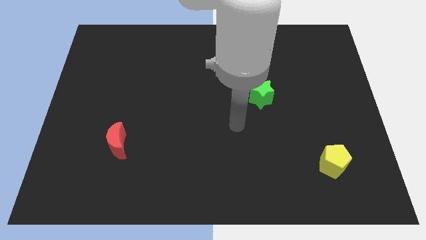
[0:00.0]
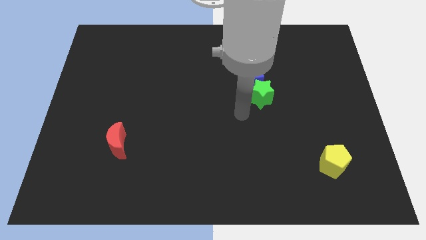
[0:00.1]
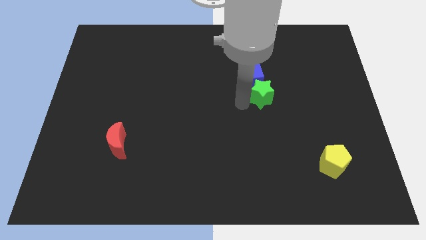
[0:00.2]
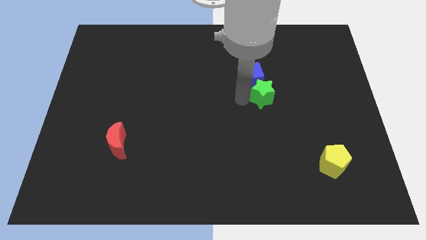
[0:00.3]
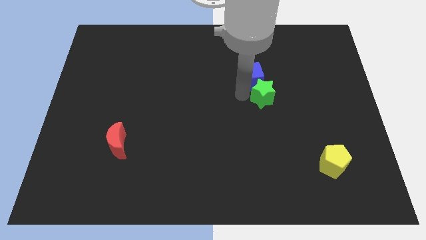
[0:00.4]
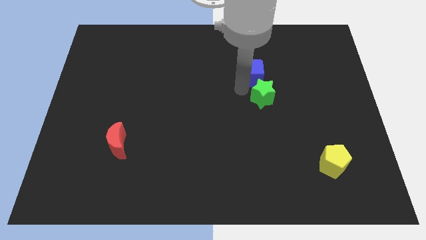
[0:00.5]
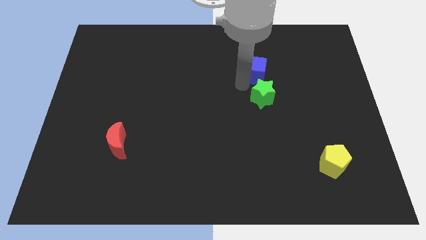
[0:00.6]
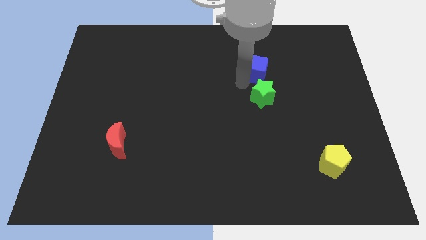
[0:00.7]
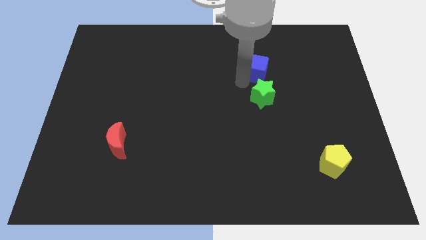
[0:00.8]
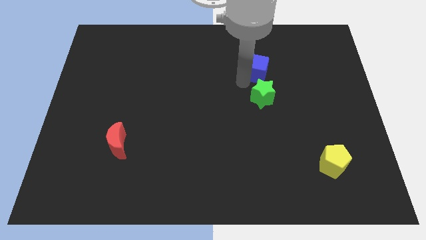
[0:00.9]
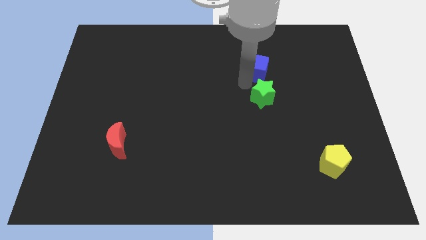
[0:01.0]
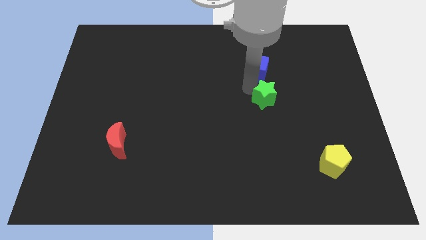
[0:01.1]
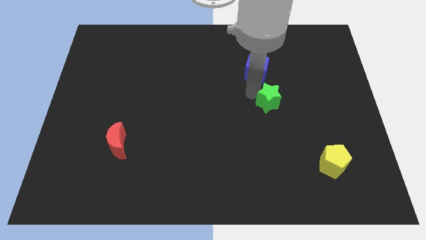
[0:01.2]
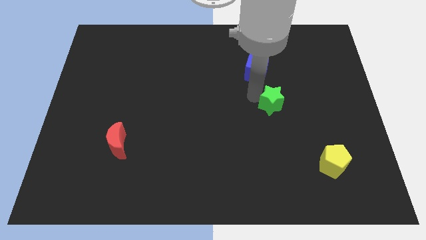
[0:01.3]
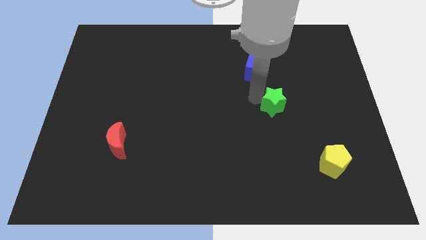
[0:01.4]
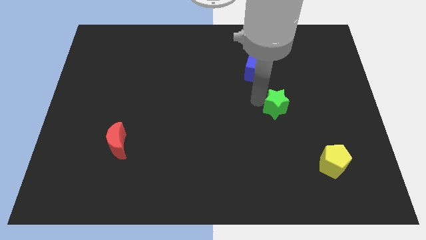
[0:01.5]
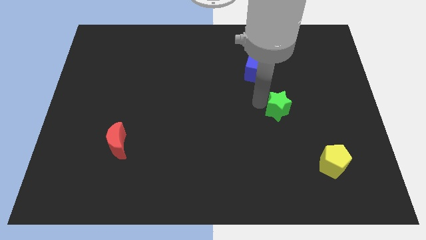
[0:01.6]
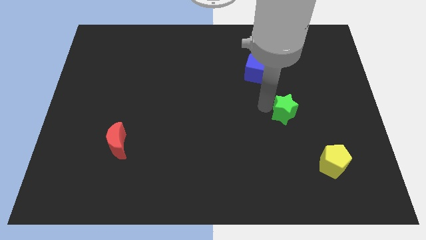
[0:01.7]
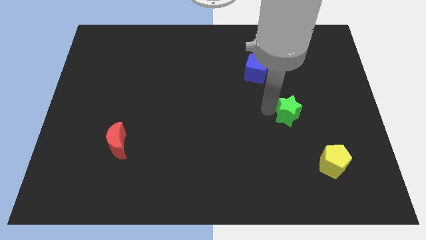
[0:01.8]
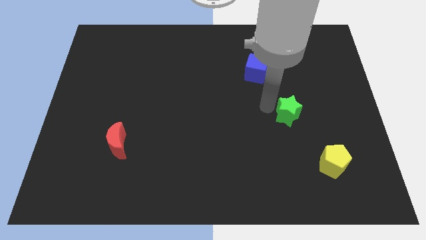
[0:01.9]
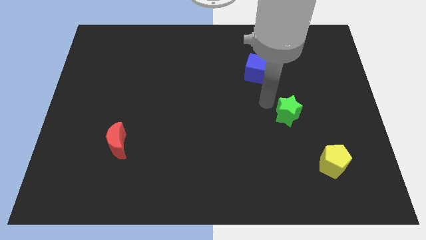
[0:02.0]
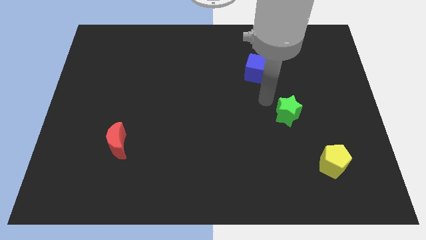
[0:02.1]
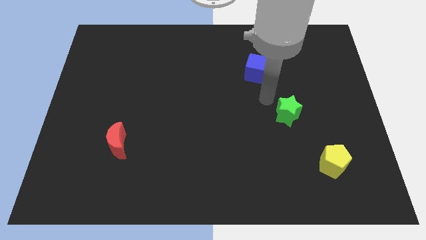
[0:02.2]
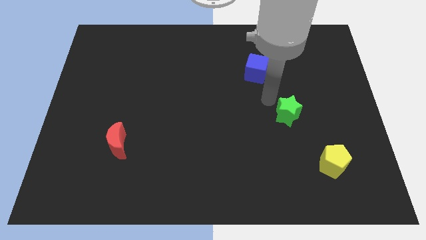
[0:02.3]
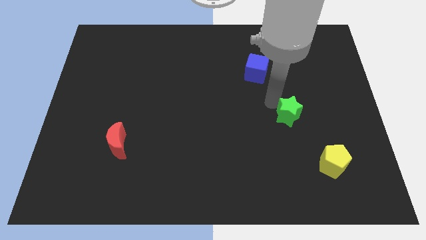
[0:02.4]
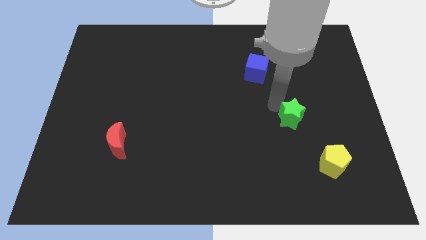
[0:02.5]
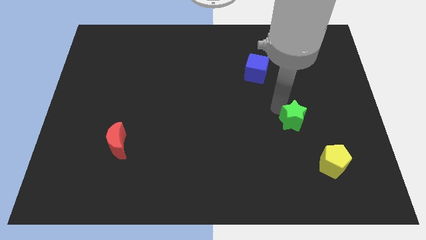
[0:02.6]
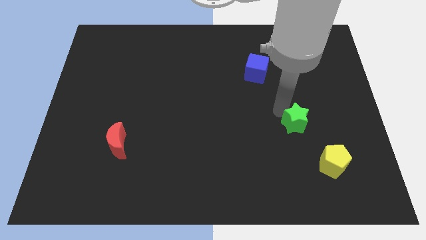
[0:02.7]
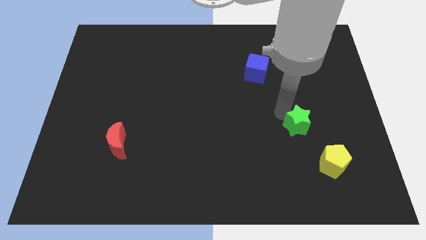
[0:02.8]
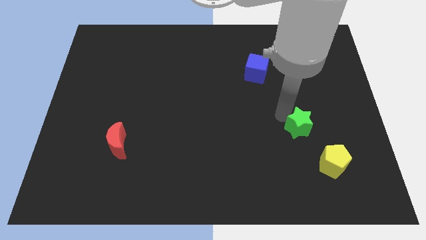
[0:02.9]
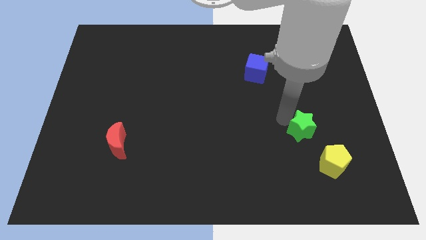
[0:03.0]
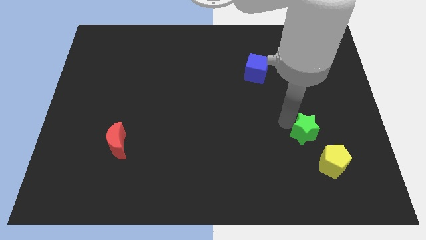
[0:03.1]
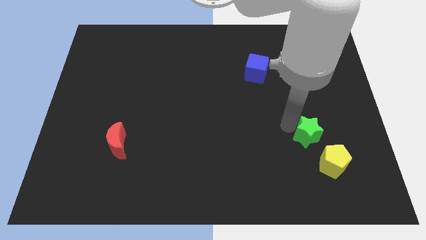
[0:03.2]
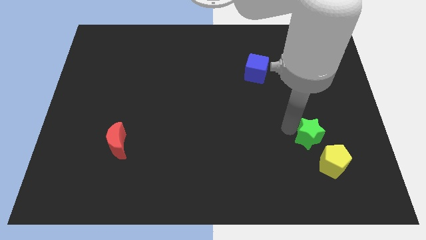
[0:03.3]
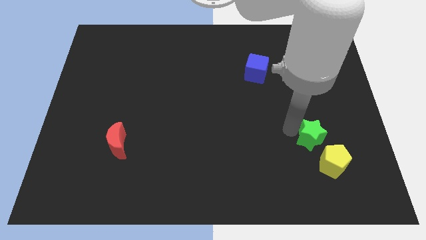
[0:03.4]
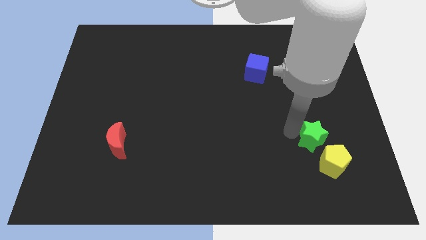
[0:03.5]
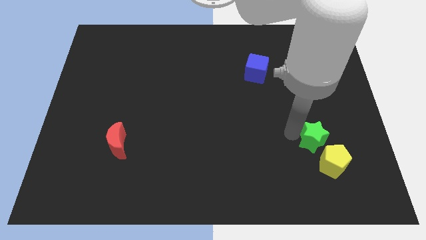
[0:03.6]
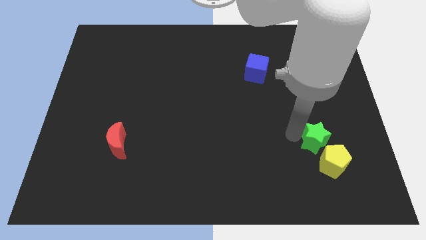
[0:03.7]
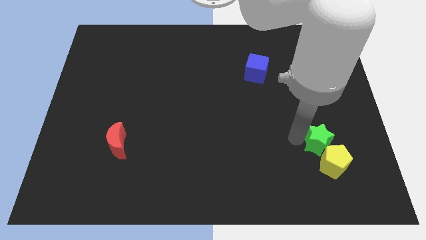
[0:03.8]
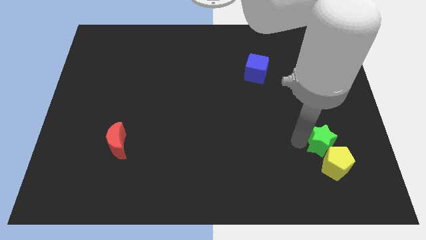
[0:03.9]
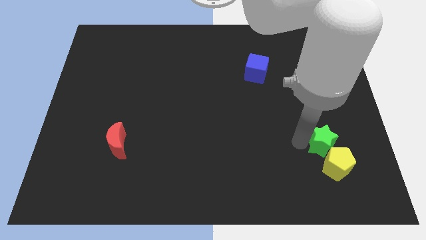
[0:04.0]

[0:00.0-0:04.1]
move the green star close to the yellow block

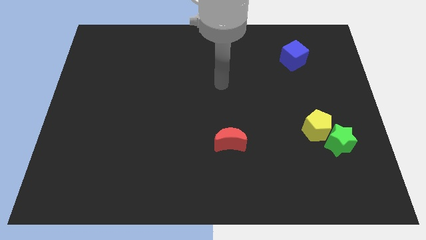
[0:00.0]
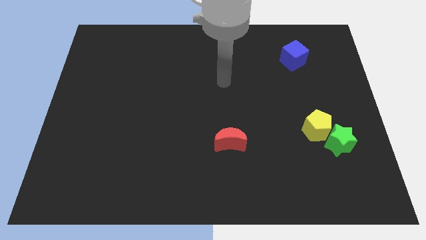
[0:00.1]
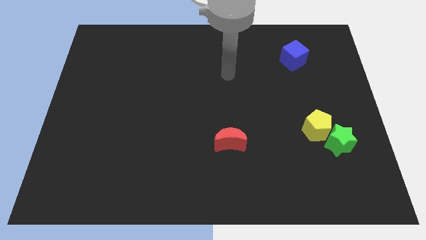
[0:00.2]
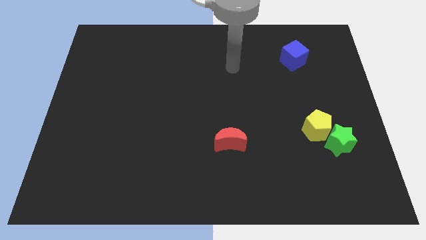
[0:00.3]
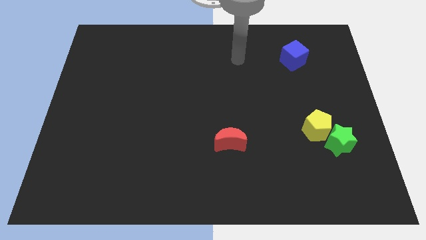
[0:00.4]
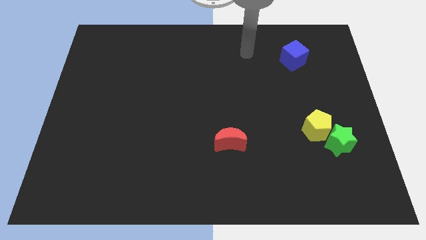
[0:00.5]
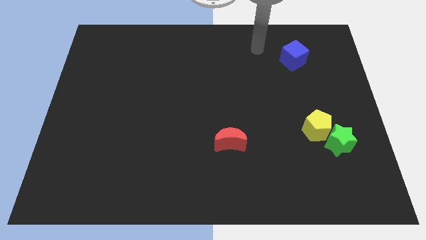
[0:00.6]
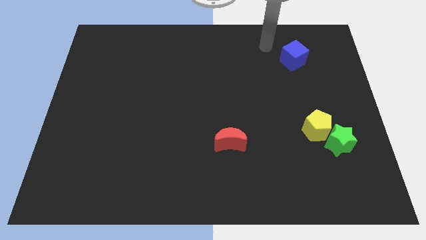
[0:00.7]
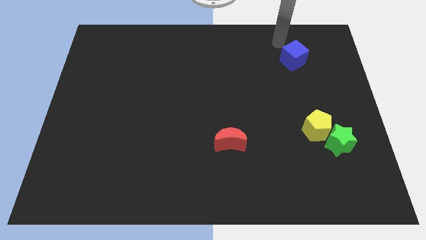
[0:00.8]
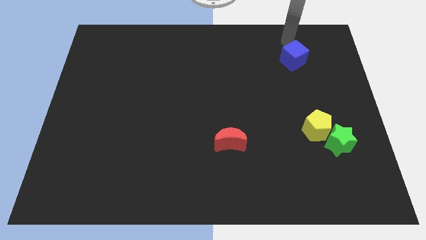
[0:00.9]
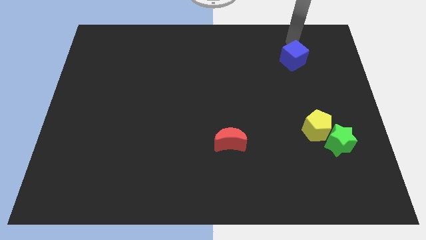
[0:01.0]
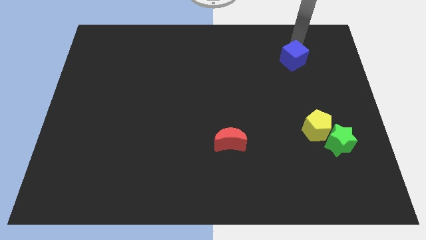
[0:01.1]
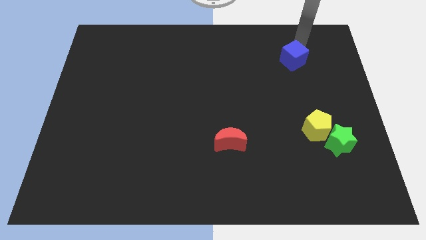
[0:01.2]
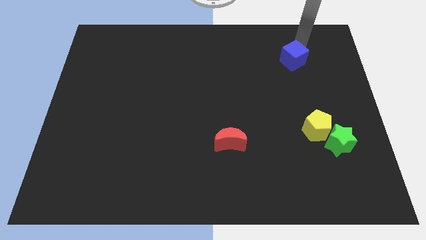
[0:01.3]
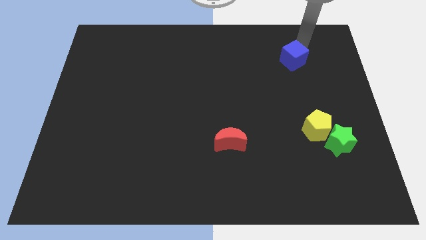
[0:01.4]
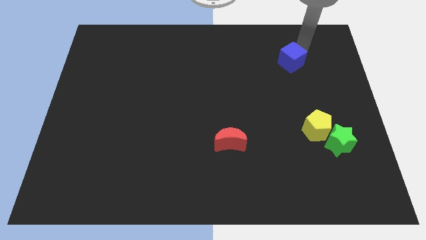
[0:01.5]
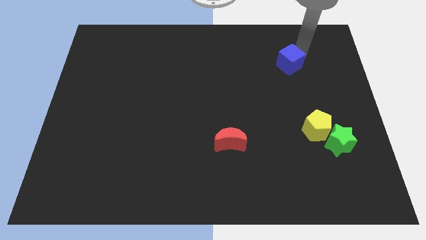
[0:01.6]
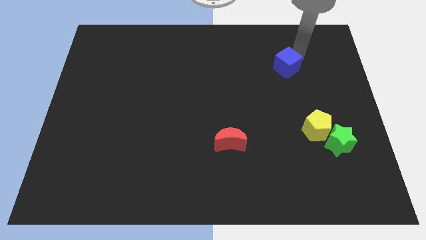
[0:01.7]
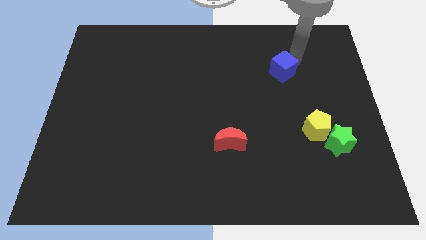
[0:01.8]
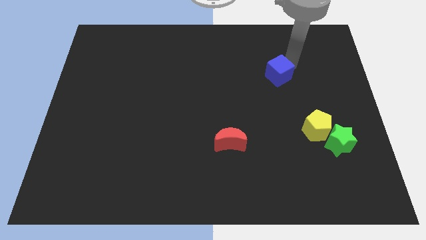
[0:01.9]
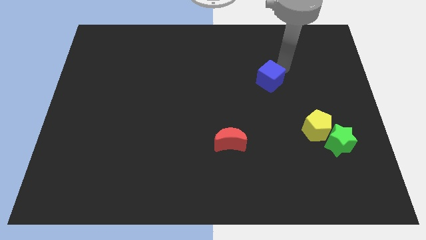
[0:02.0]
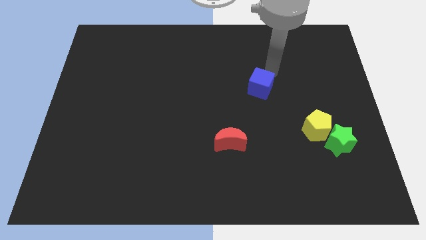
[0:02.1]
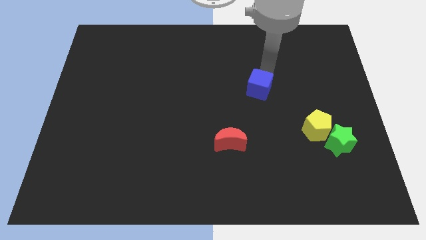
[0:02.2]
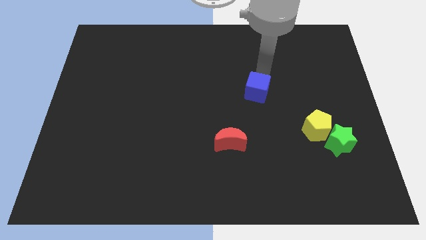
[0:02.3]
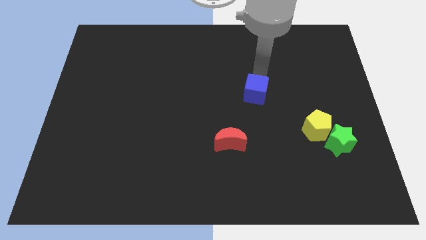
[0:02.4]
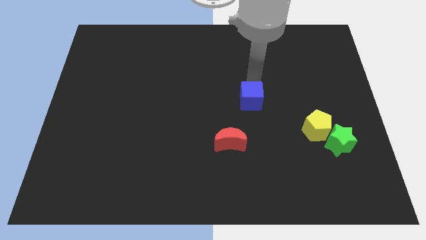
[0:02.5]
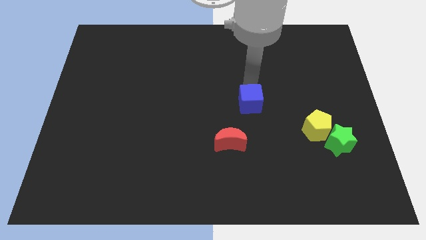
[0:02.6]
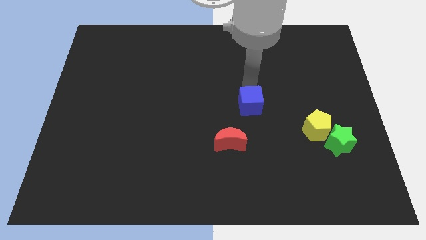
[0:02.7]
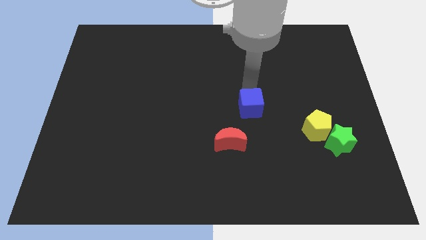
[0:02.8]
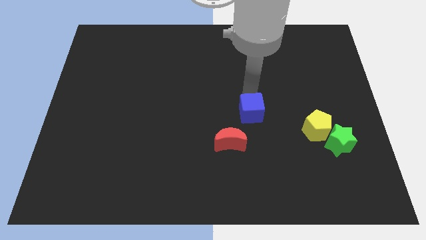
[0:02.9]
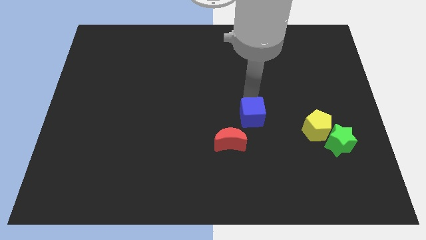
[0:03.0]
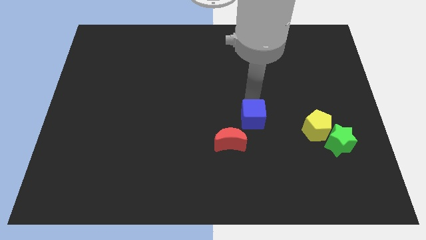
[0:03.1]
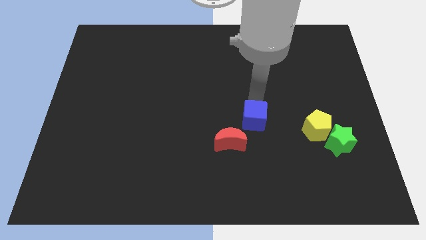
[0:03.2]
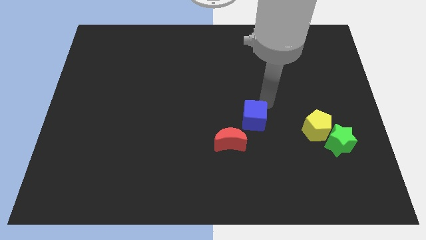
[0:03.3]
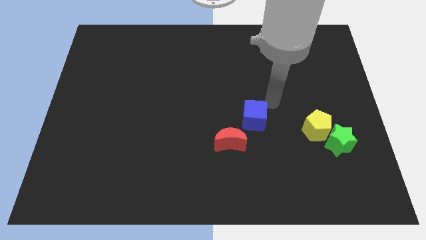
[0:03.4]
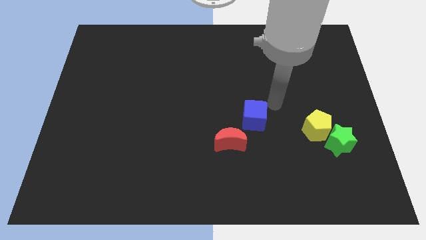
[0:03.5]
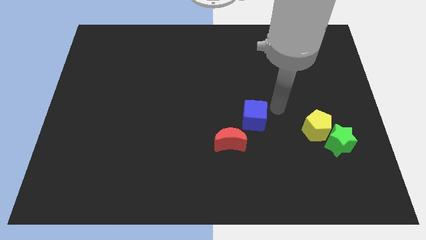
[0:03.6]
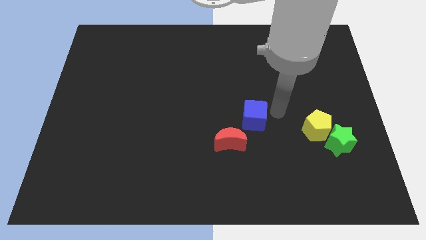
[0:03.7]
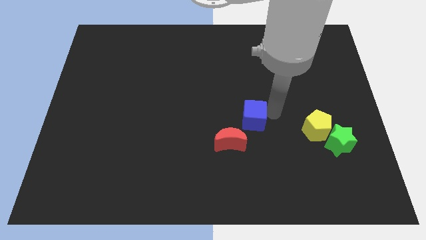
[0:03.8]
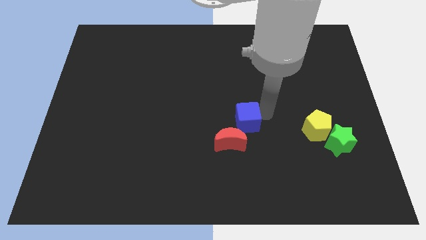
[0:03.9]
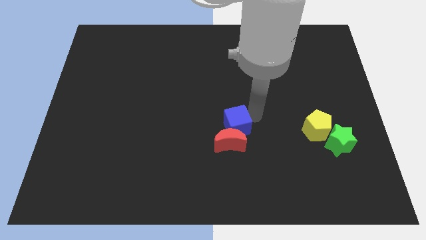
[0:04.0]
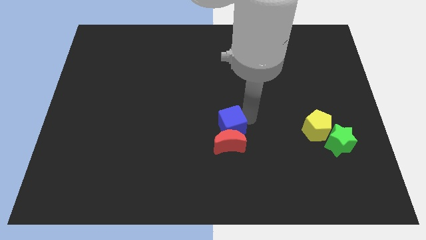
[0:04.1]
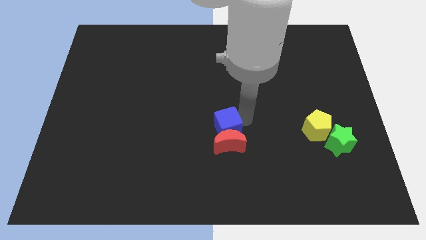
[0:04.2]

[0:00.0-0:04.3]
move the blue block towards the moon

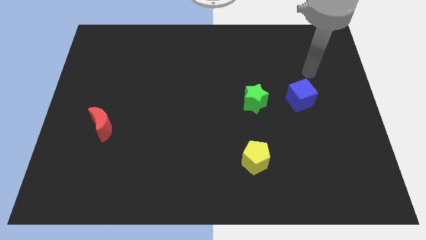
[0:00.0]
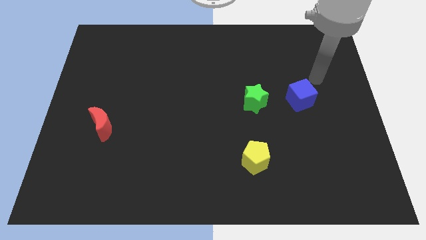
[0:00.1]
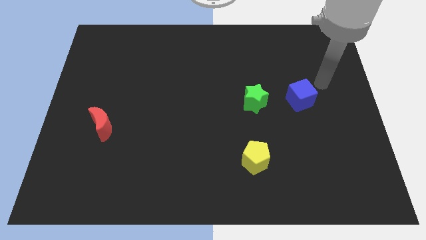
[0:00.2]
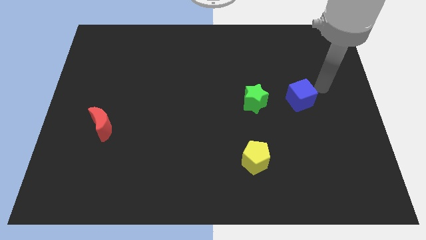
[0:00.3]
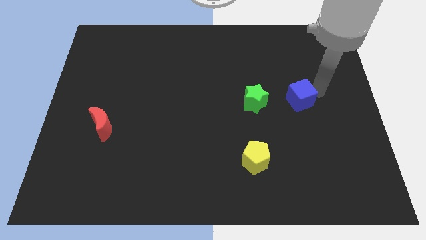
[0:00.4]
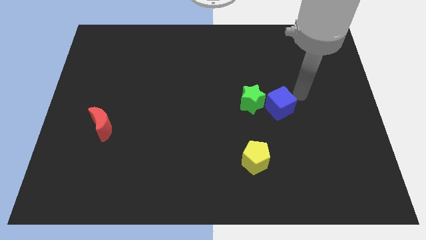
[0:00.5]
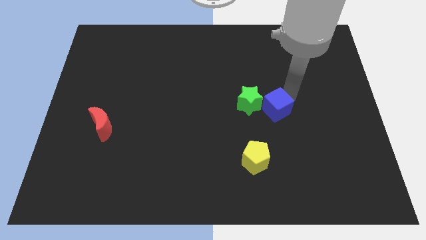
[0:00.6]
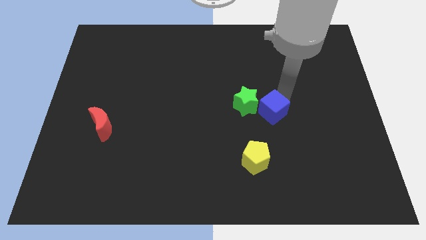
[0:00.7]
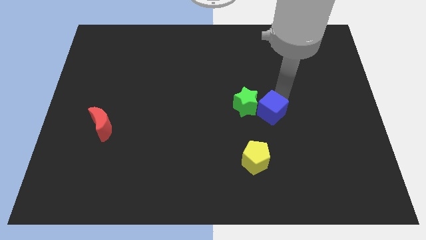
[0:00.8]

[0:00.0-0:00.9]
move the cube close to the green star
